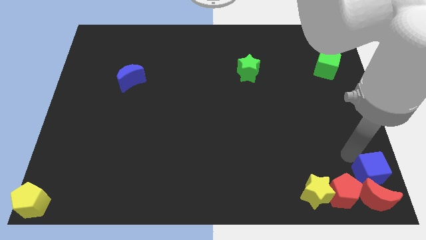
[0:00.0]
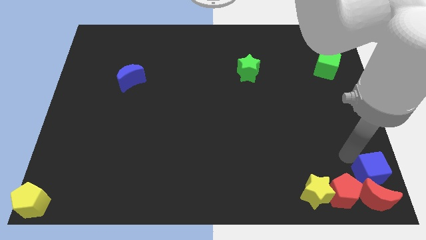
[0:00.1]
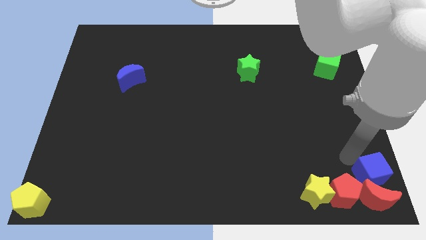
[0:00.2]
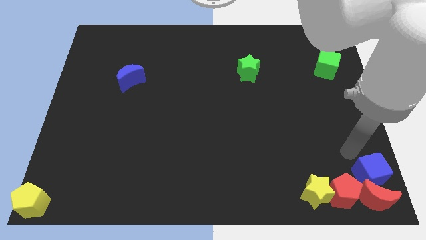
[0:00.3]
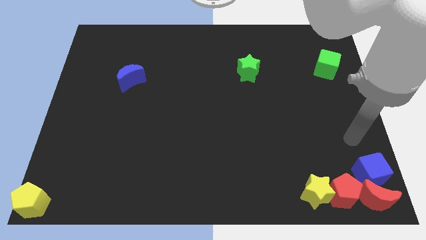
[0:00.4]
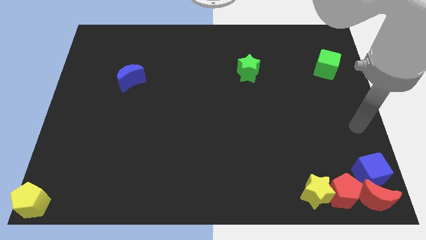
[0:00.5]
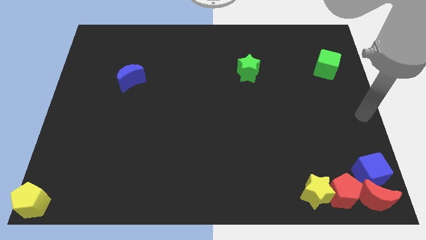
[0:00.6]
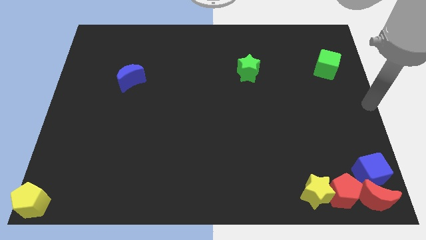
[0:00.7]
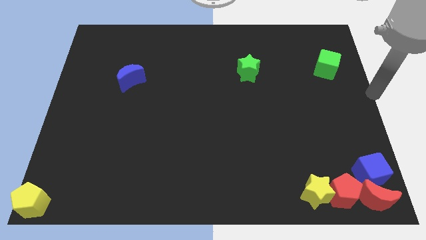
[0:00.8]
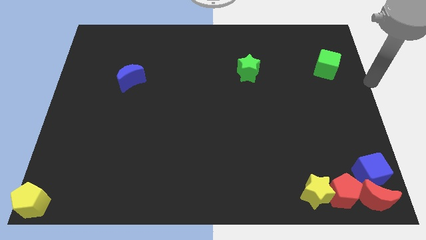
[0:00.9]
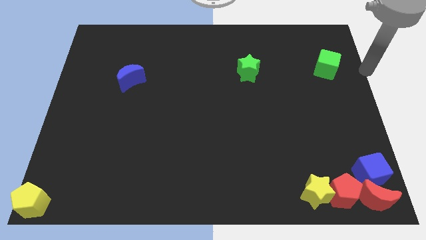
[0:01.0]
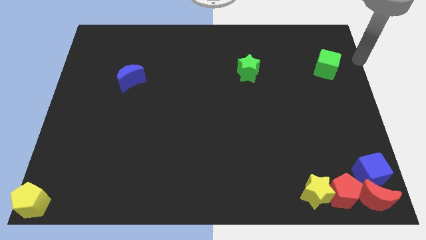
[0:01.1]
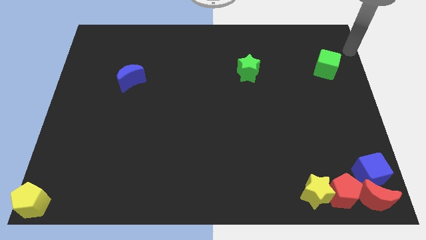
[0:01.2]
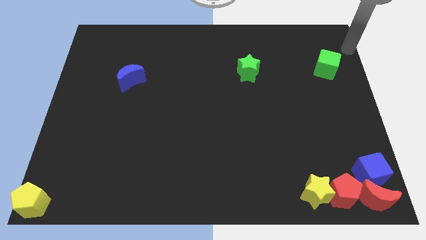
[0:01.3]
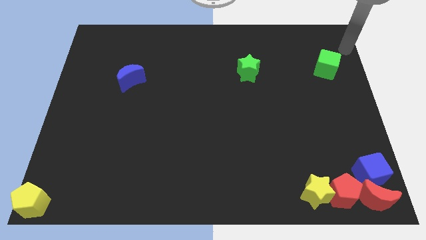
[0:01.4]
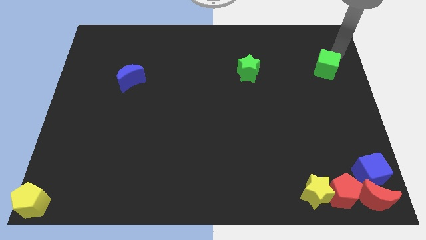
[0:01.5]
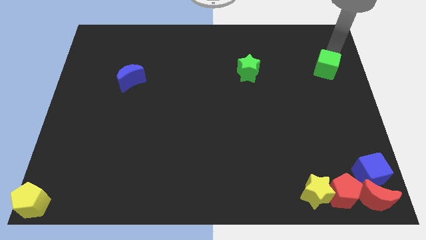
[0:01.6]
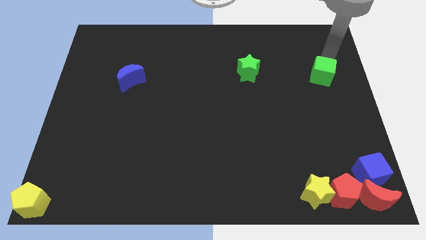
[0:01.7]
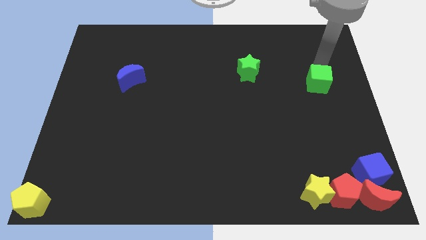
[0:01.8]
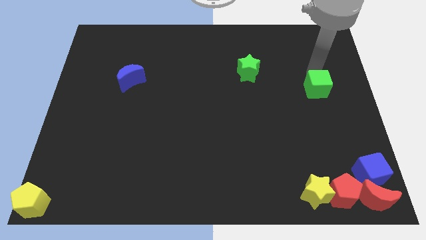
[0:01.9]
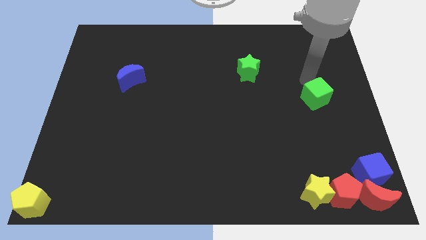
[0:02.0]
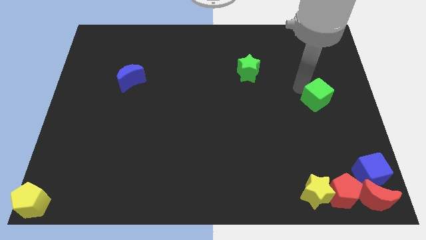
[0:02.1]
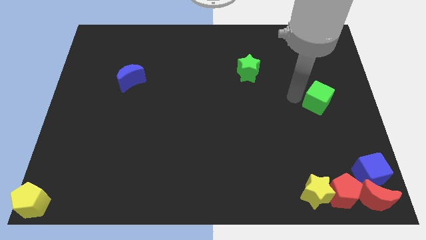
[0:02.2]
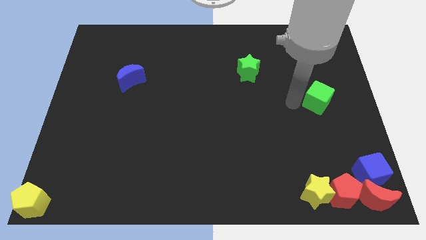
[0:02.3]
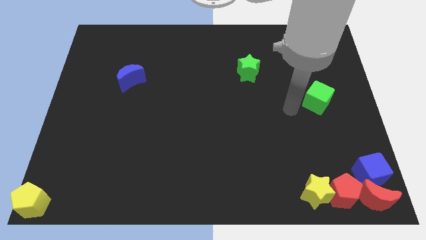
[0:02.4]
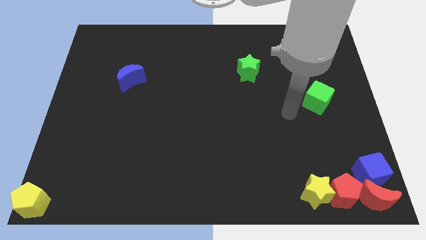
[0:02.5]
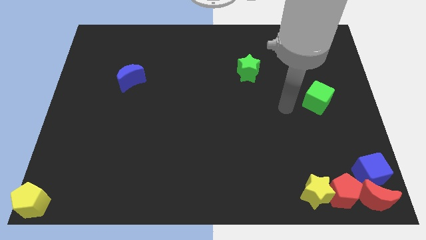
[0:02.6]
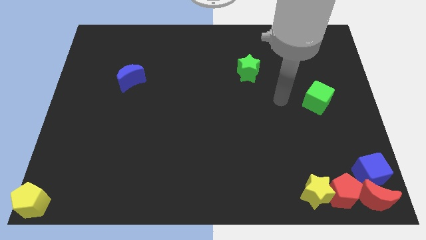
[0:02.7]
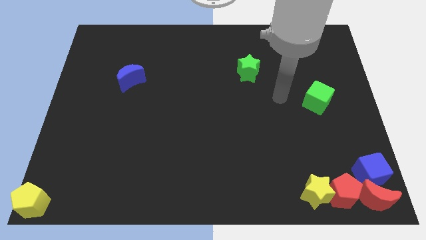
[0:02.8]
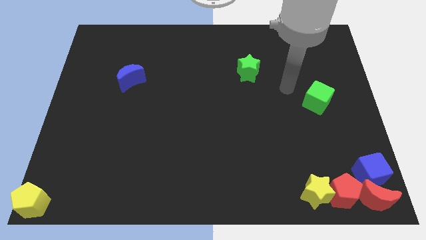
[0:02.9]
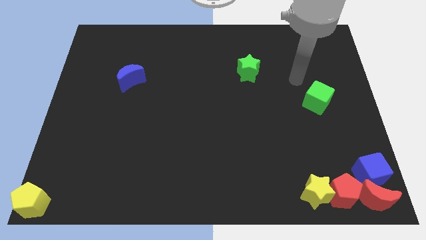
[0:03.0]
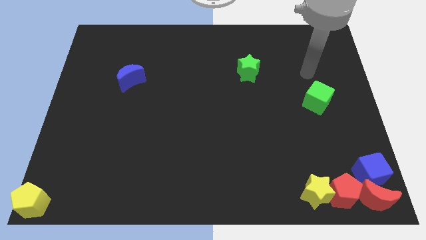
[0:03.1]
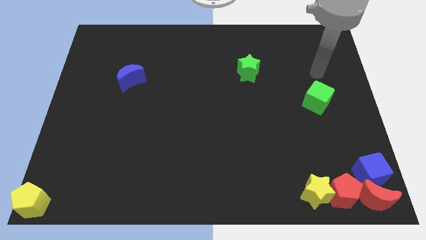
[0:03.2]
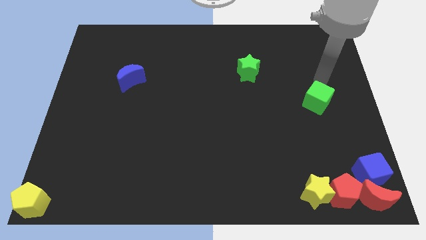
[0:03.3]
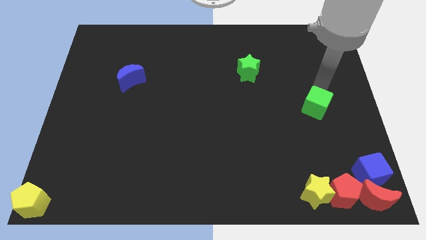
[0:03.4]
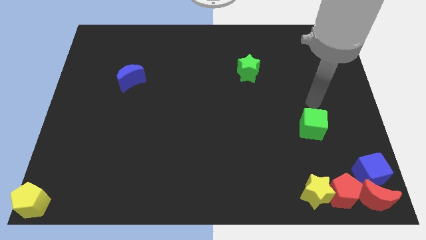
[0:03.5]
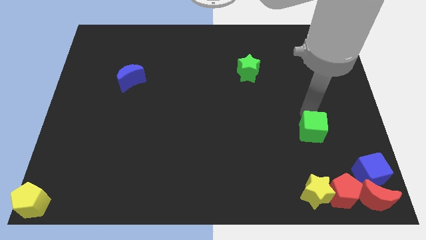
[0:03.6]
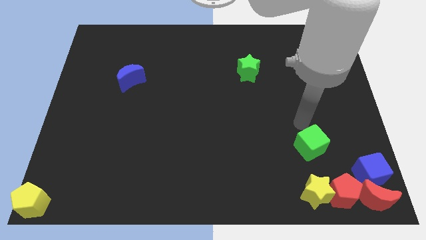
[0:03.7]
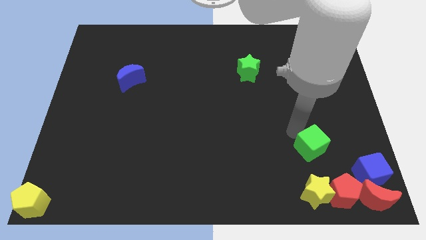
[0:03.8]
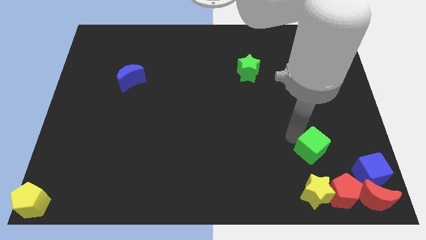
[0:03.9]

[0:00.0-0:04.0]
move the green cube vertical to yellow star

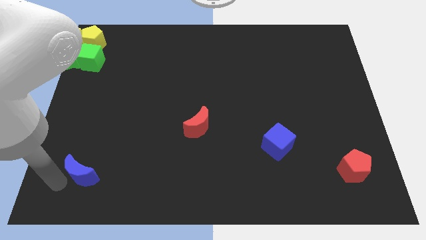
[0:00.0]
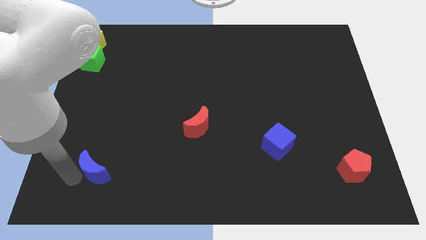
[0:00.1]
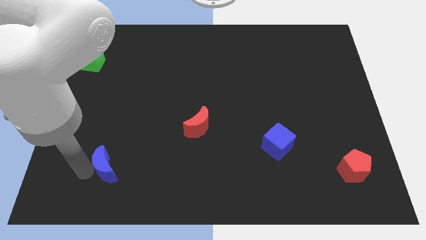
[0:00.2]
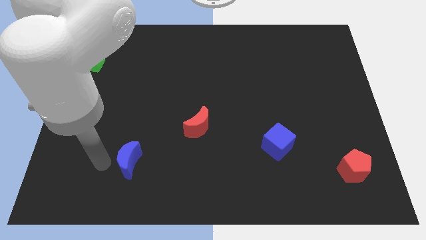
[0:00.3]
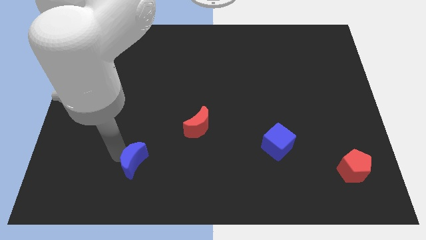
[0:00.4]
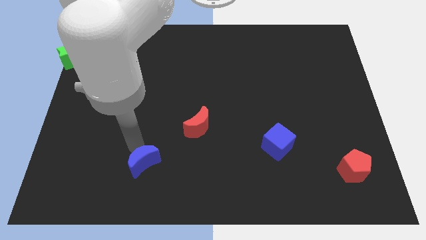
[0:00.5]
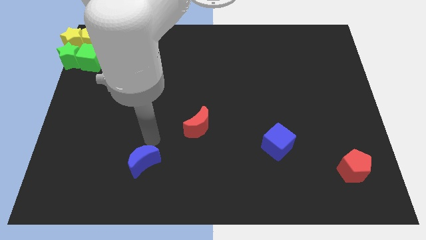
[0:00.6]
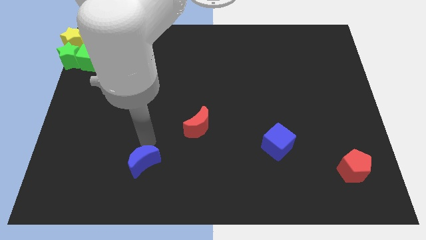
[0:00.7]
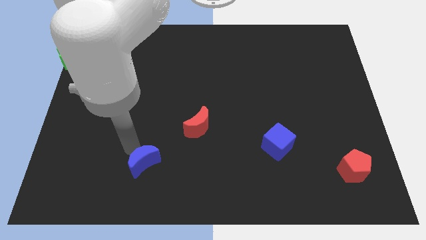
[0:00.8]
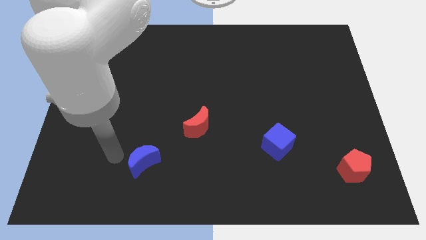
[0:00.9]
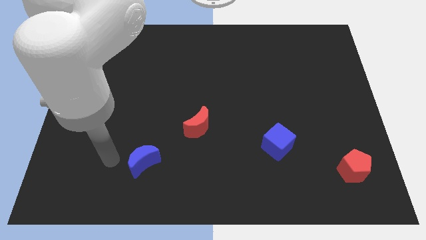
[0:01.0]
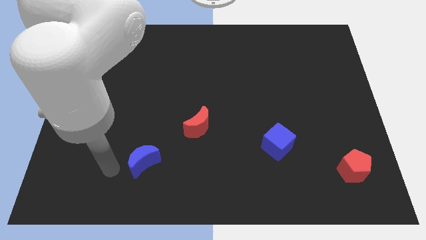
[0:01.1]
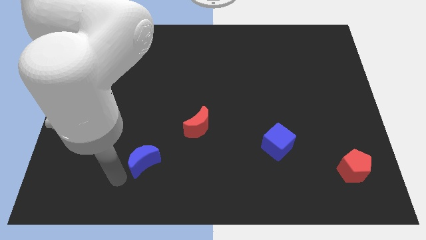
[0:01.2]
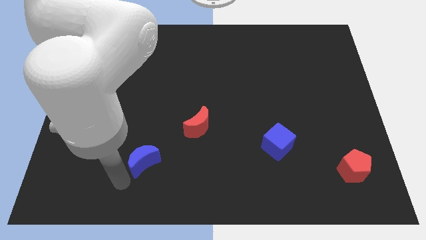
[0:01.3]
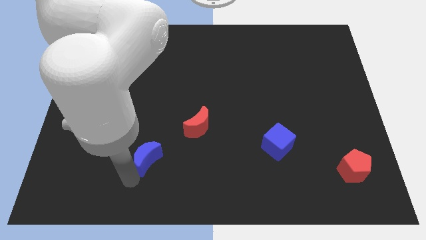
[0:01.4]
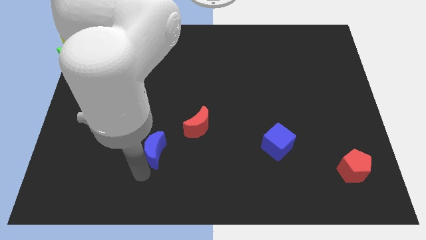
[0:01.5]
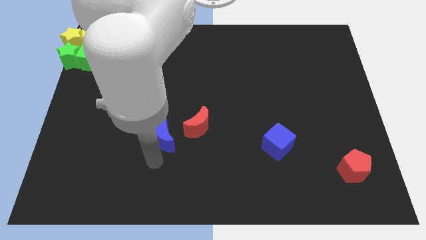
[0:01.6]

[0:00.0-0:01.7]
move the blue crescent to the bottom left side of the red crescent

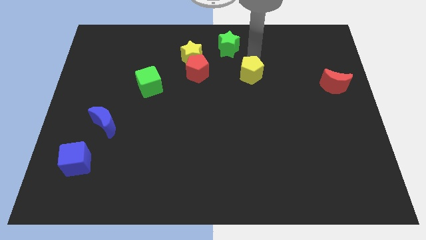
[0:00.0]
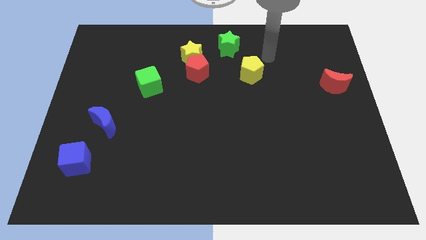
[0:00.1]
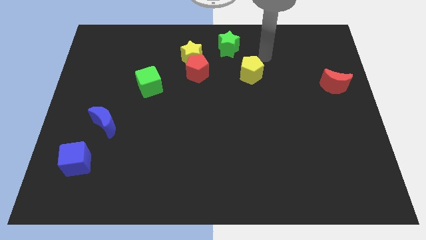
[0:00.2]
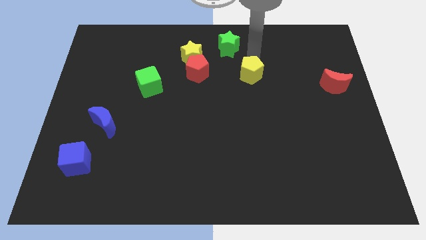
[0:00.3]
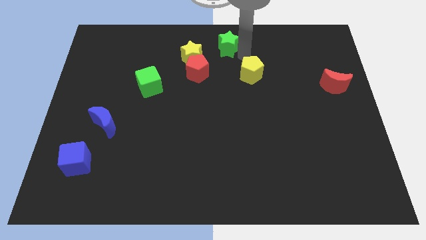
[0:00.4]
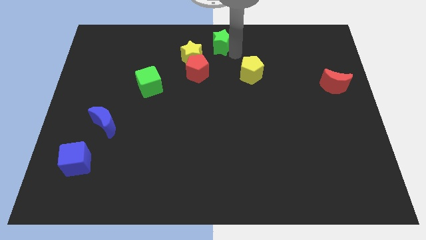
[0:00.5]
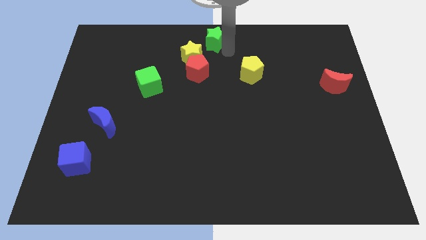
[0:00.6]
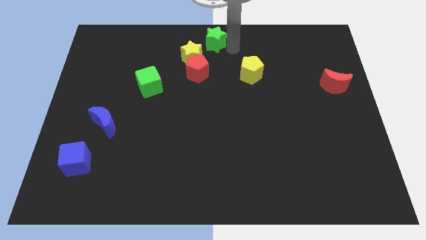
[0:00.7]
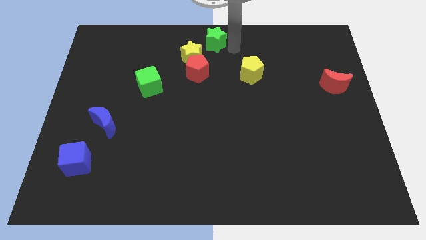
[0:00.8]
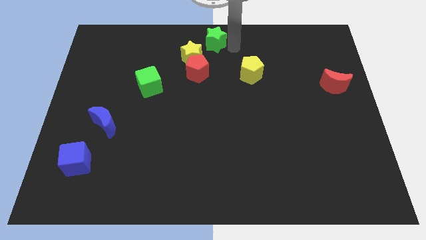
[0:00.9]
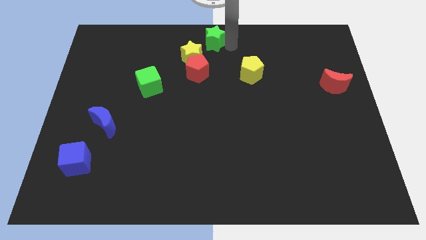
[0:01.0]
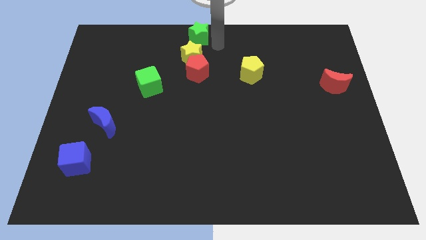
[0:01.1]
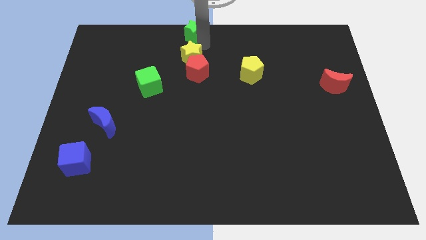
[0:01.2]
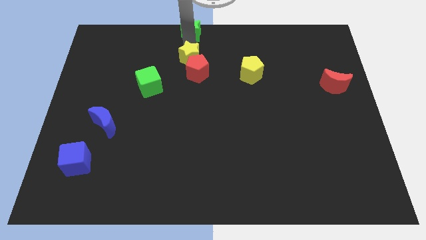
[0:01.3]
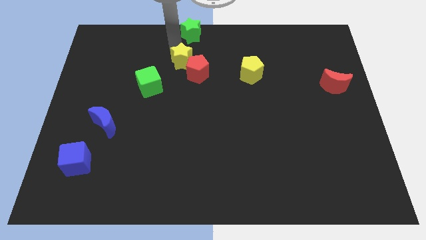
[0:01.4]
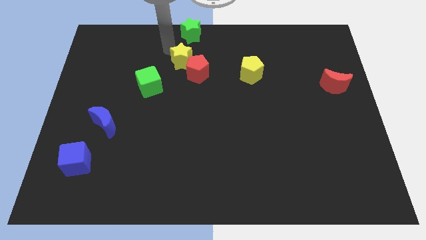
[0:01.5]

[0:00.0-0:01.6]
place the green star above the yellow star

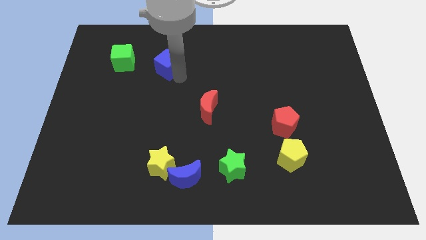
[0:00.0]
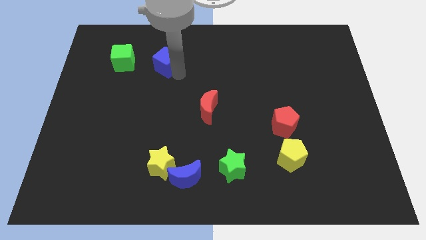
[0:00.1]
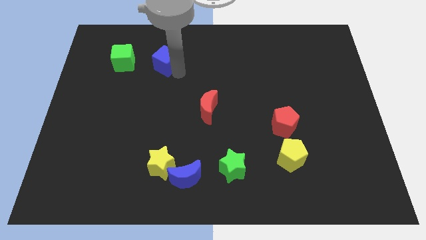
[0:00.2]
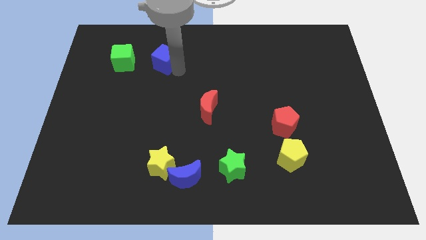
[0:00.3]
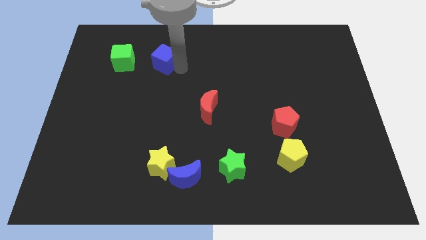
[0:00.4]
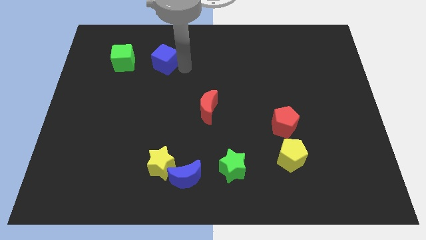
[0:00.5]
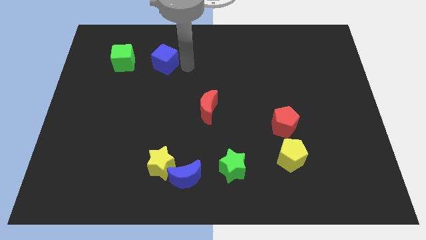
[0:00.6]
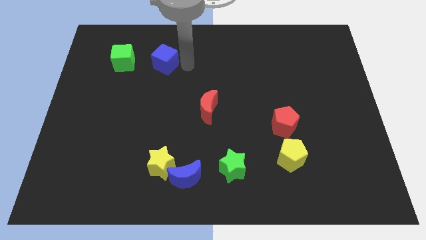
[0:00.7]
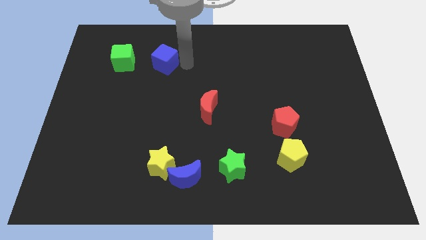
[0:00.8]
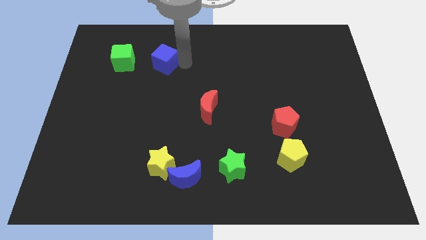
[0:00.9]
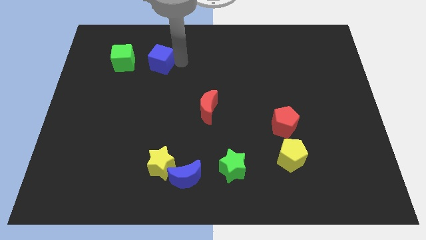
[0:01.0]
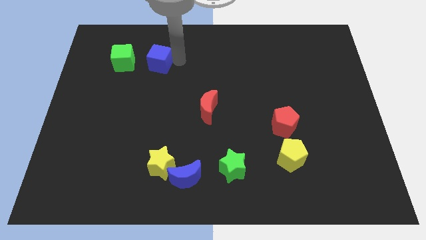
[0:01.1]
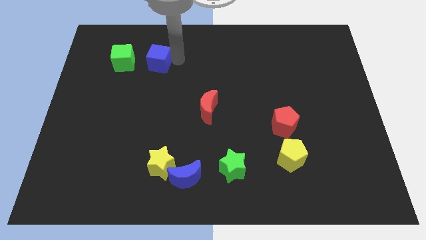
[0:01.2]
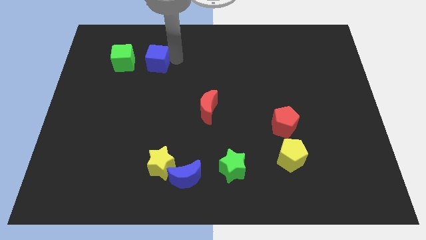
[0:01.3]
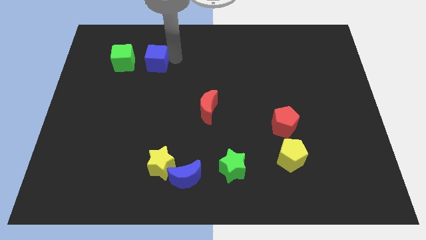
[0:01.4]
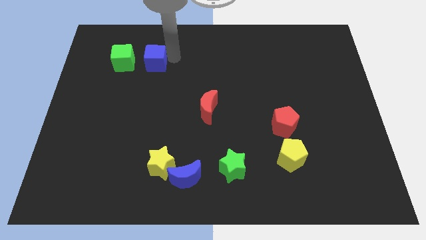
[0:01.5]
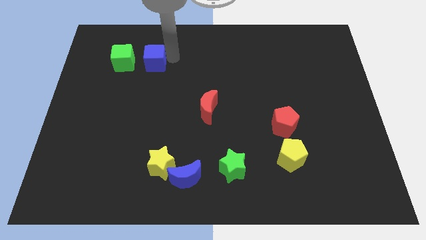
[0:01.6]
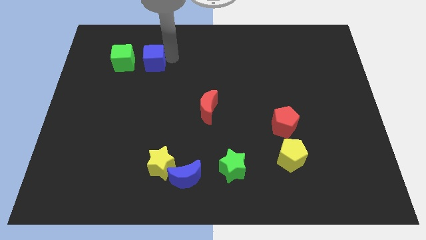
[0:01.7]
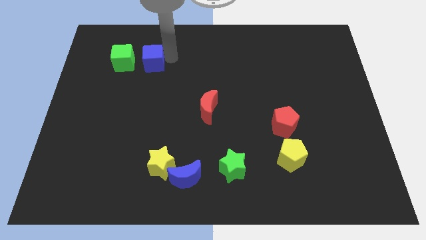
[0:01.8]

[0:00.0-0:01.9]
move blue cube to the right of green cube

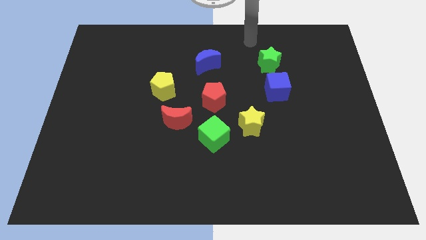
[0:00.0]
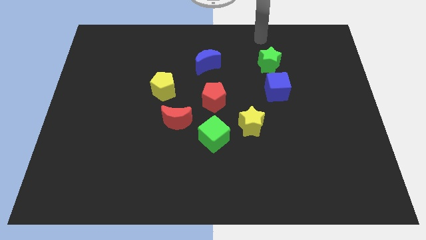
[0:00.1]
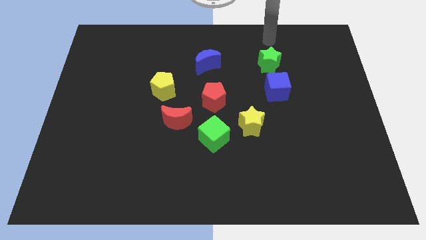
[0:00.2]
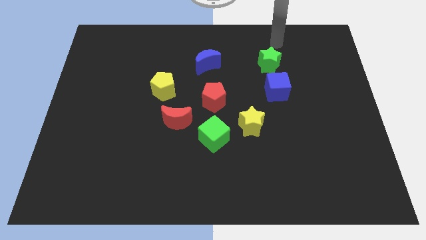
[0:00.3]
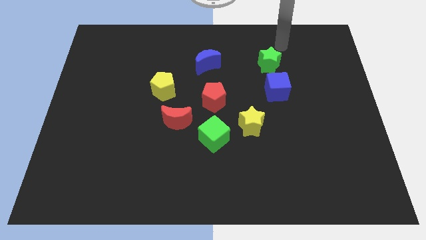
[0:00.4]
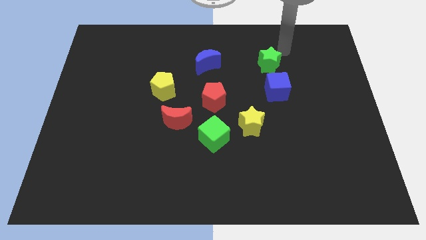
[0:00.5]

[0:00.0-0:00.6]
move the arm to the green star
